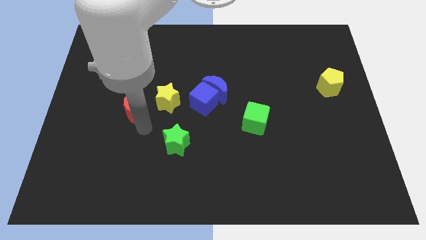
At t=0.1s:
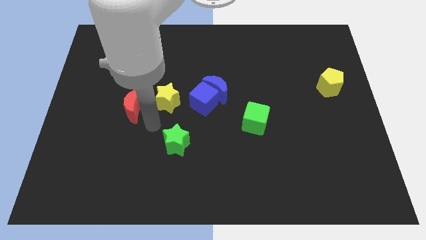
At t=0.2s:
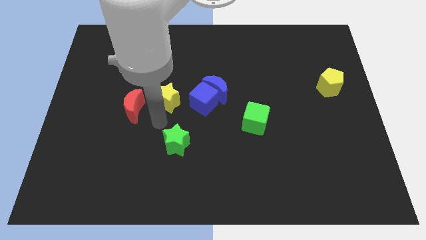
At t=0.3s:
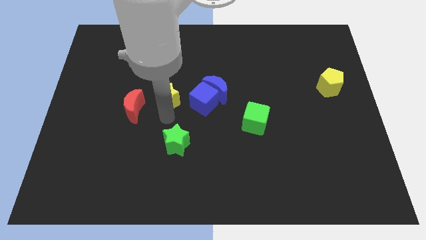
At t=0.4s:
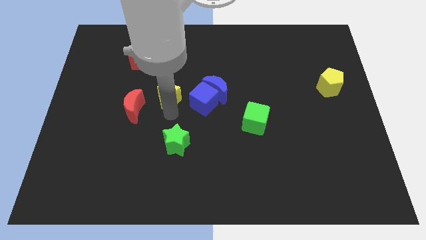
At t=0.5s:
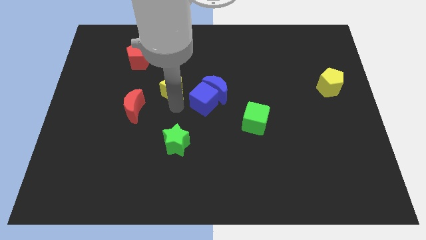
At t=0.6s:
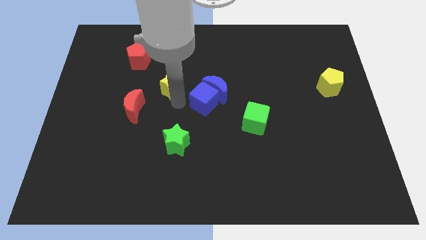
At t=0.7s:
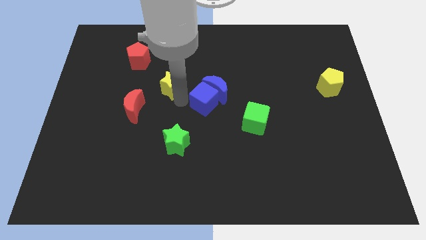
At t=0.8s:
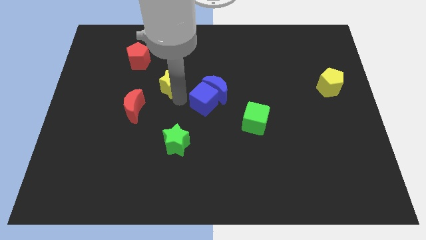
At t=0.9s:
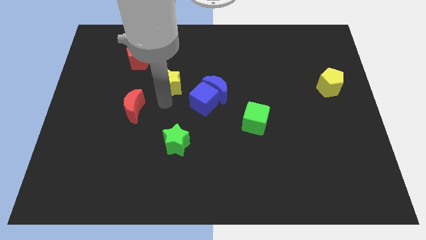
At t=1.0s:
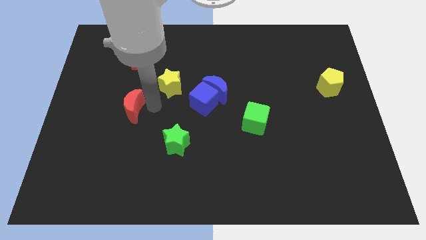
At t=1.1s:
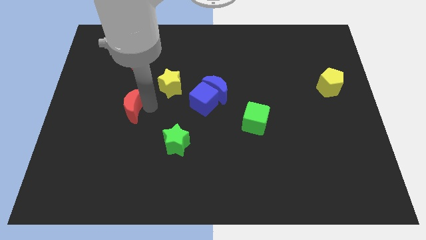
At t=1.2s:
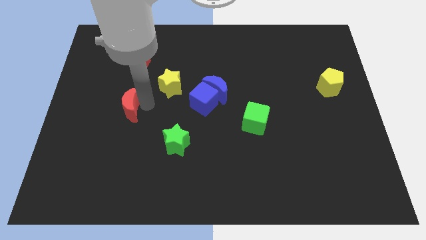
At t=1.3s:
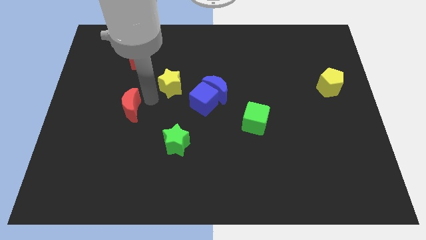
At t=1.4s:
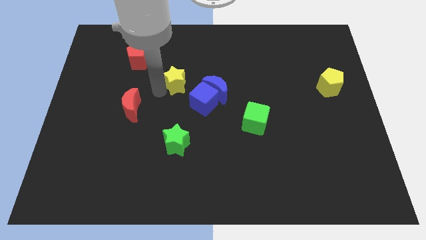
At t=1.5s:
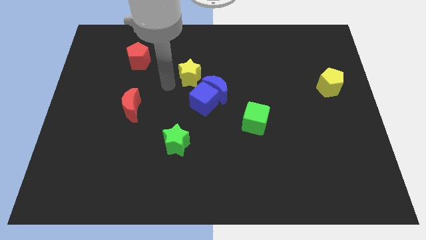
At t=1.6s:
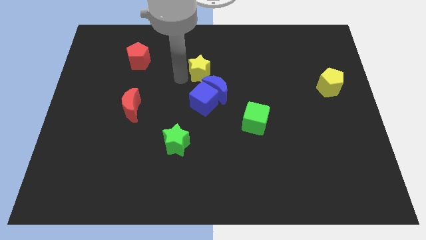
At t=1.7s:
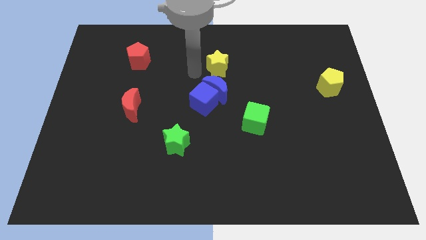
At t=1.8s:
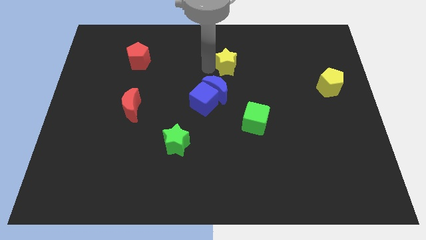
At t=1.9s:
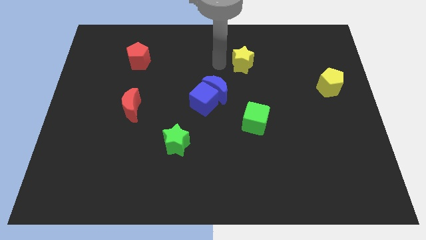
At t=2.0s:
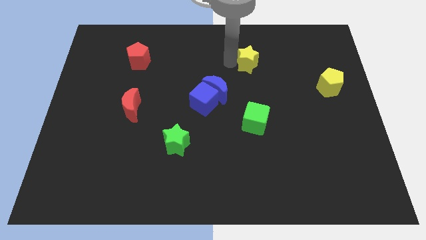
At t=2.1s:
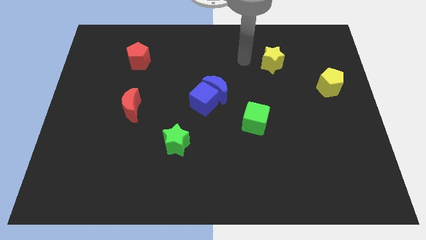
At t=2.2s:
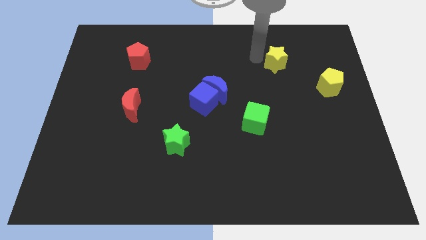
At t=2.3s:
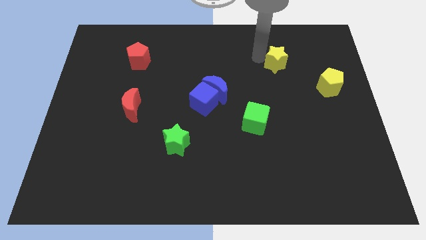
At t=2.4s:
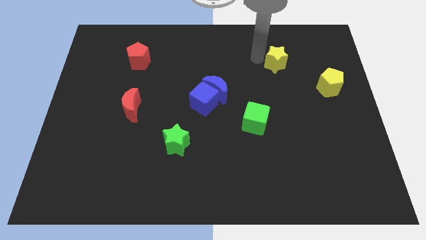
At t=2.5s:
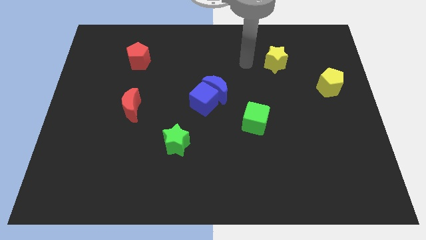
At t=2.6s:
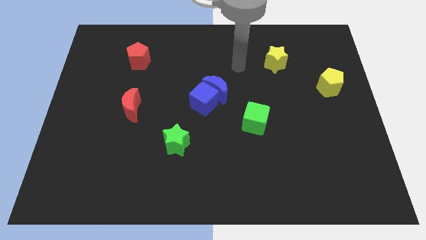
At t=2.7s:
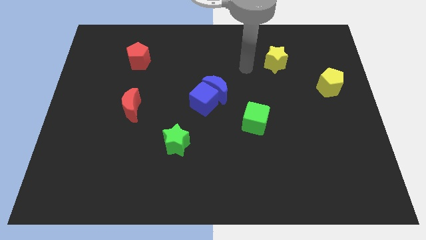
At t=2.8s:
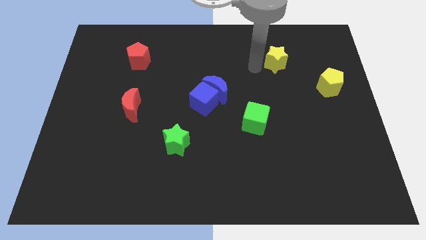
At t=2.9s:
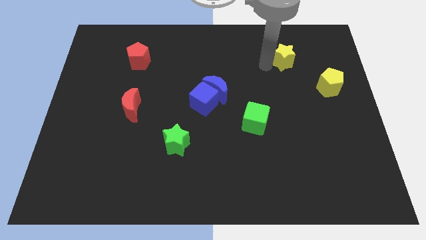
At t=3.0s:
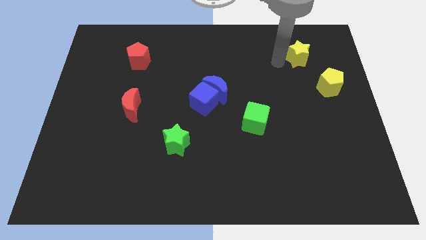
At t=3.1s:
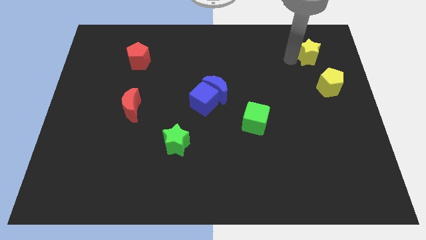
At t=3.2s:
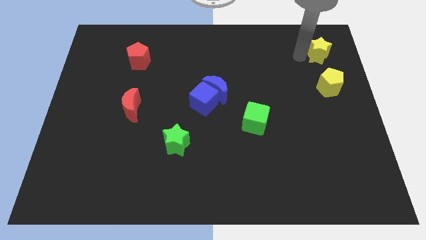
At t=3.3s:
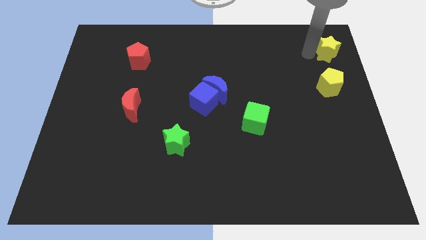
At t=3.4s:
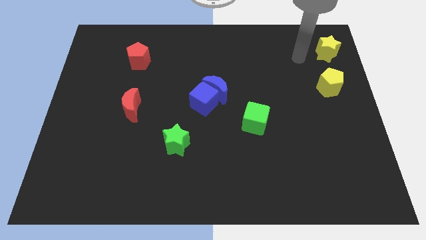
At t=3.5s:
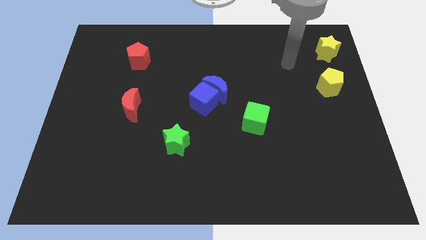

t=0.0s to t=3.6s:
place the yellow star above the yellow pentagon

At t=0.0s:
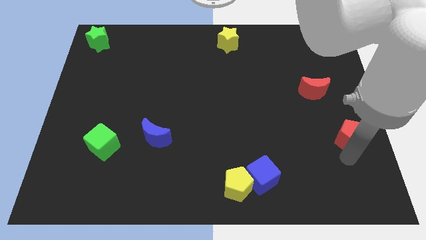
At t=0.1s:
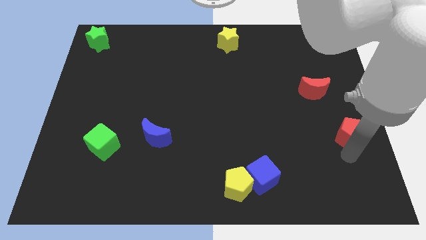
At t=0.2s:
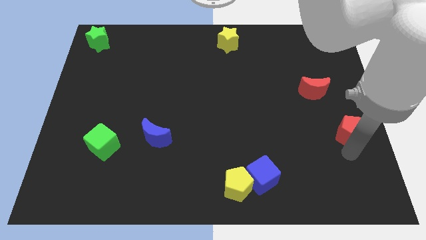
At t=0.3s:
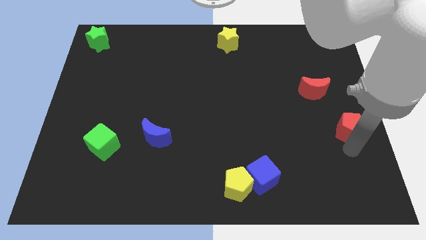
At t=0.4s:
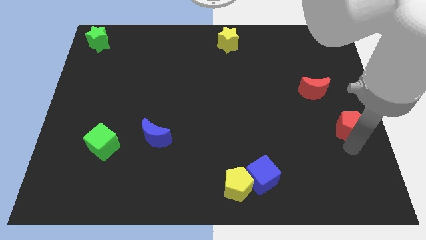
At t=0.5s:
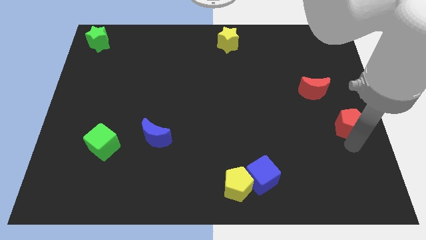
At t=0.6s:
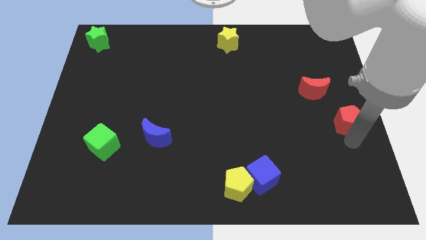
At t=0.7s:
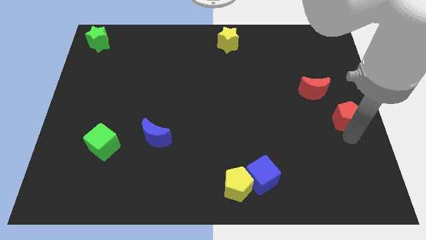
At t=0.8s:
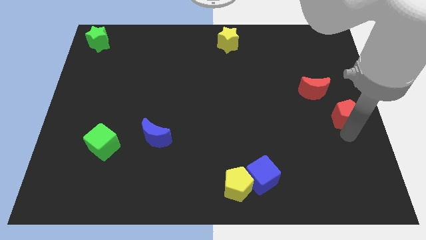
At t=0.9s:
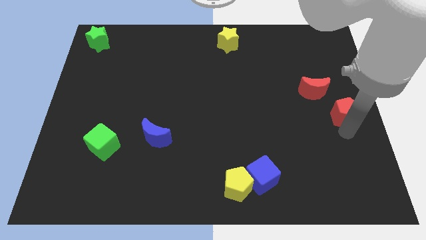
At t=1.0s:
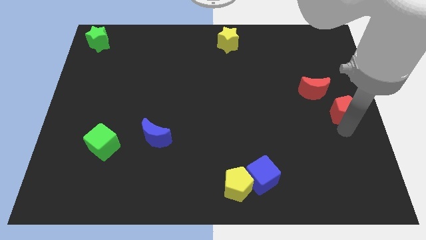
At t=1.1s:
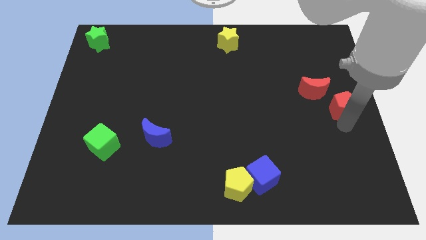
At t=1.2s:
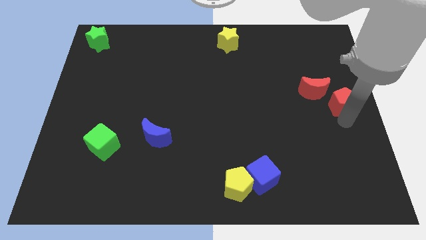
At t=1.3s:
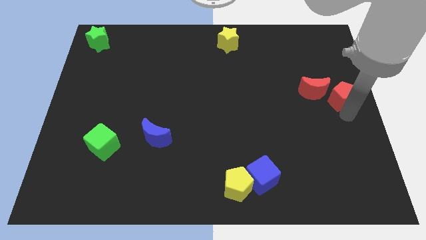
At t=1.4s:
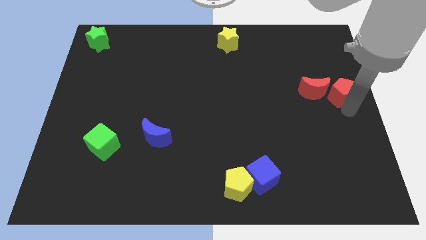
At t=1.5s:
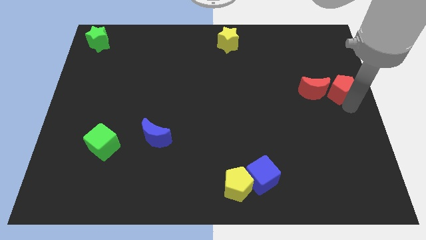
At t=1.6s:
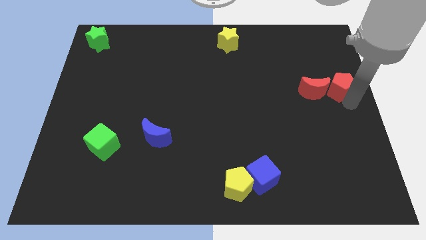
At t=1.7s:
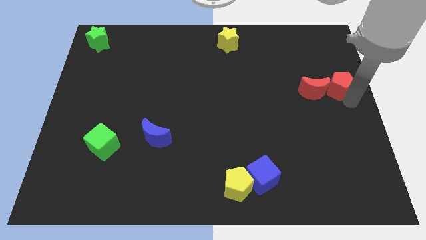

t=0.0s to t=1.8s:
place the red pentagon right to the red moon

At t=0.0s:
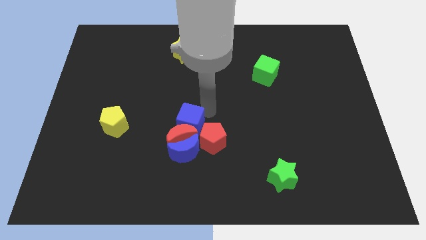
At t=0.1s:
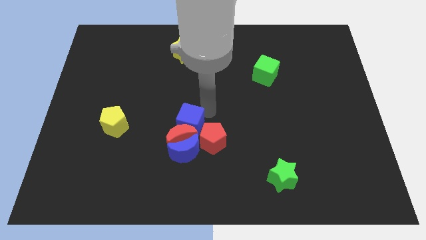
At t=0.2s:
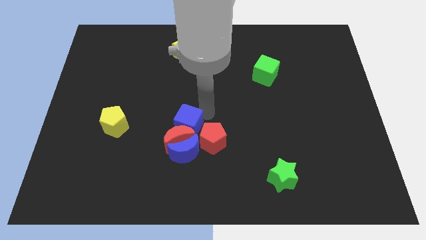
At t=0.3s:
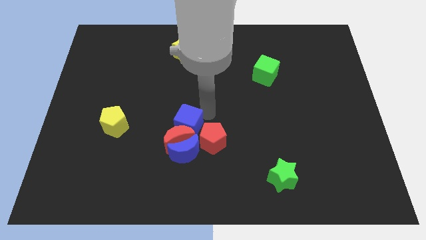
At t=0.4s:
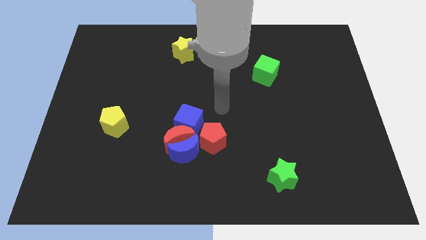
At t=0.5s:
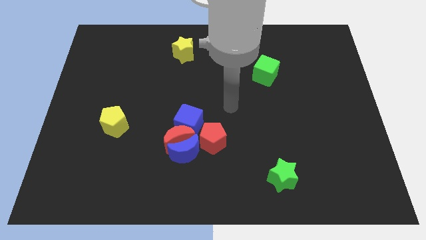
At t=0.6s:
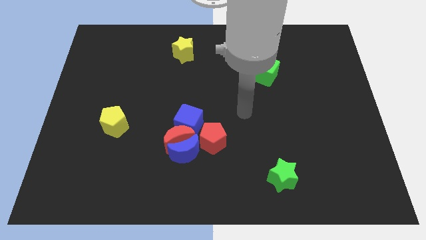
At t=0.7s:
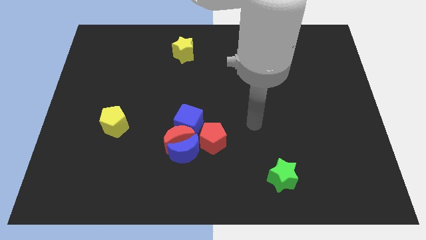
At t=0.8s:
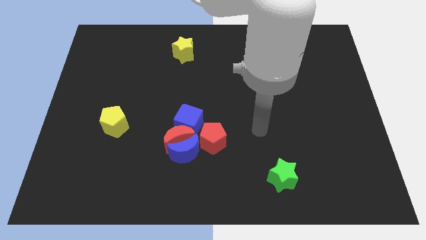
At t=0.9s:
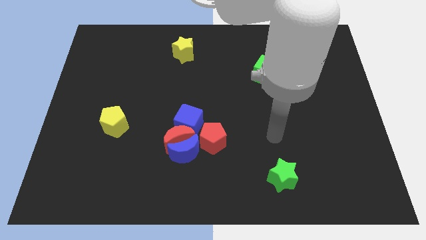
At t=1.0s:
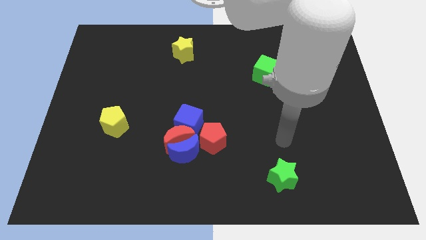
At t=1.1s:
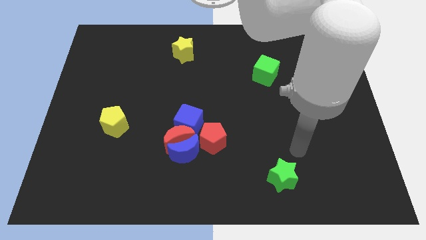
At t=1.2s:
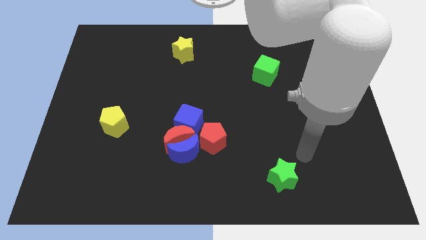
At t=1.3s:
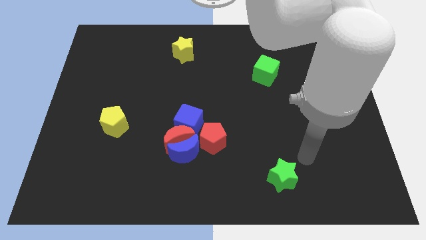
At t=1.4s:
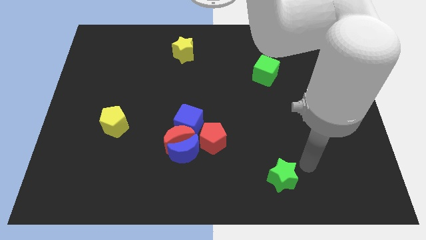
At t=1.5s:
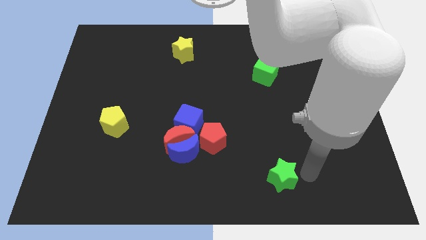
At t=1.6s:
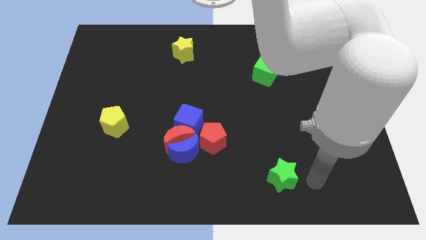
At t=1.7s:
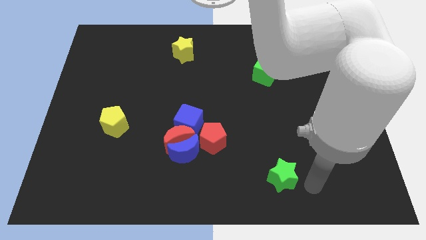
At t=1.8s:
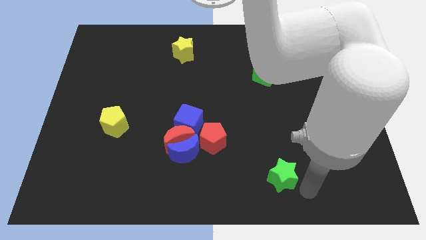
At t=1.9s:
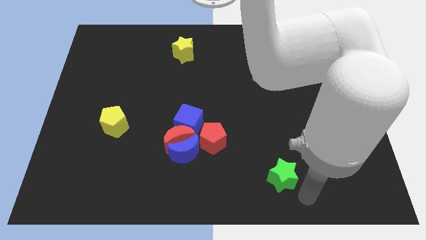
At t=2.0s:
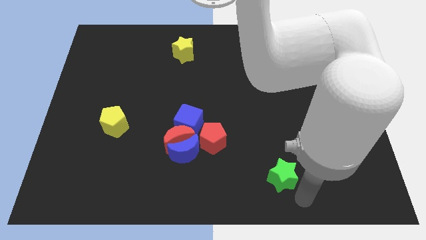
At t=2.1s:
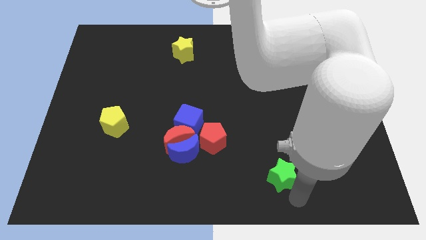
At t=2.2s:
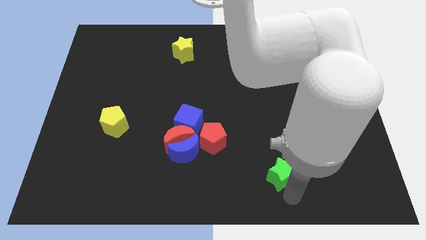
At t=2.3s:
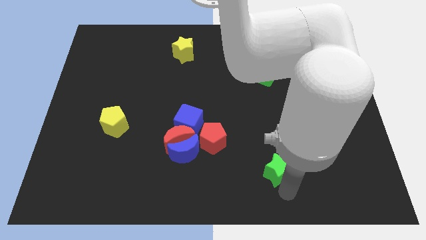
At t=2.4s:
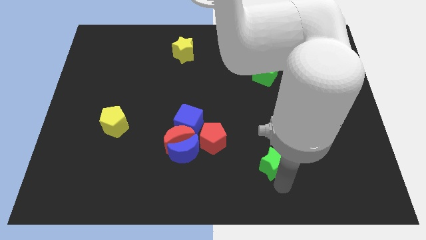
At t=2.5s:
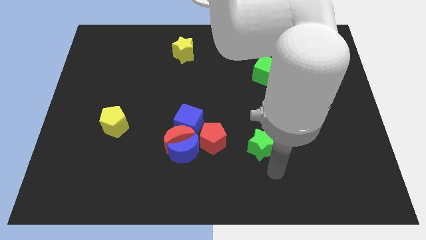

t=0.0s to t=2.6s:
move the arm towards the green star

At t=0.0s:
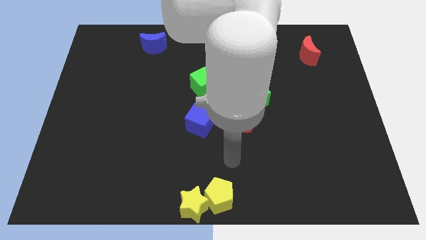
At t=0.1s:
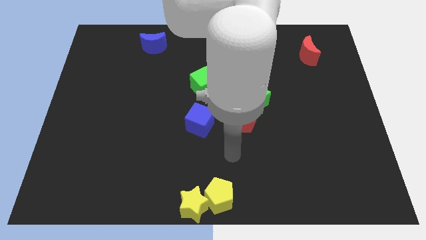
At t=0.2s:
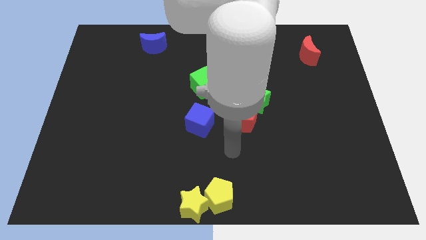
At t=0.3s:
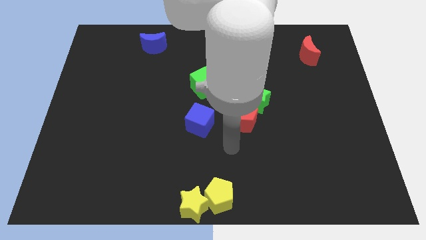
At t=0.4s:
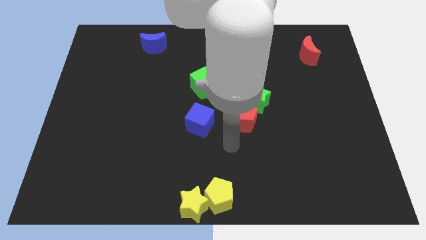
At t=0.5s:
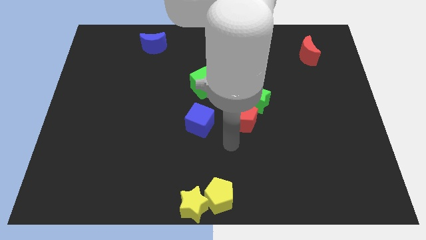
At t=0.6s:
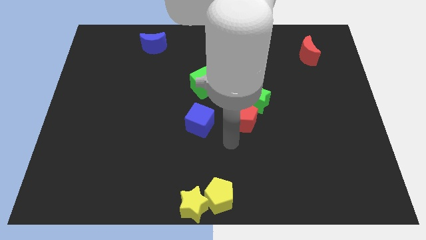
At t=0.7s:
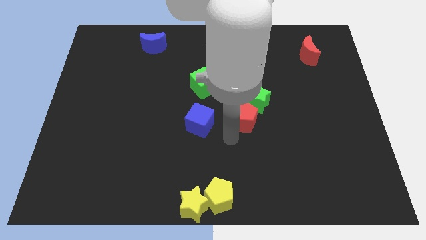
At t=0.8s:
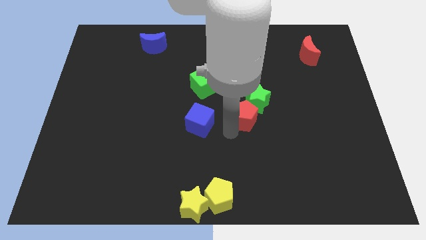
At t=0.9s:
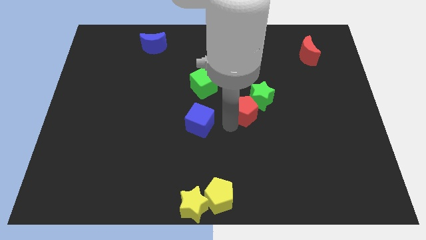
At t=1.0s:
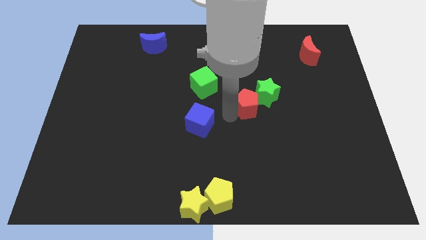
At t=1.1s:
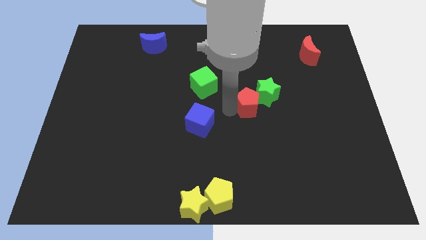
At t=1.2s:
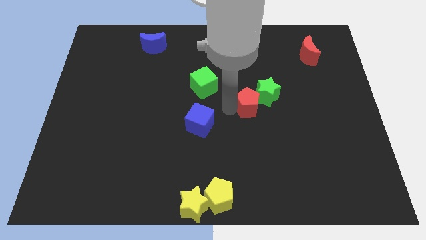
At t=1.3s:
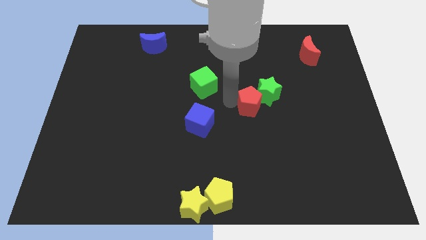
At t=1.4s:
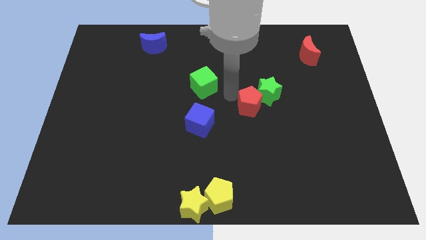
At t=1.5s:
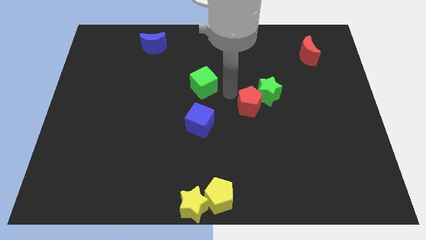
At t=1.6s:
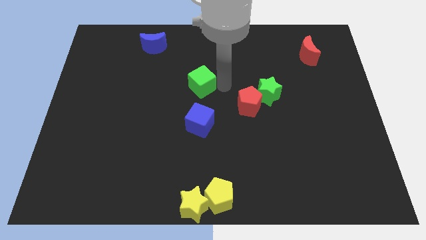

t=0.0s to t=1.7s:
move the red pentagon slightly up
